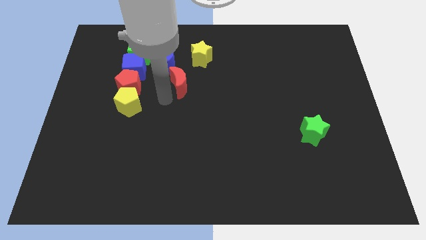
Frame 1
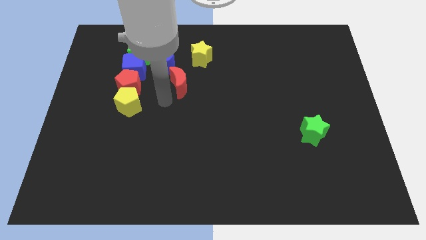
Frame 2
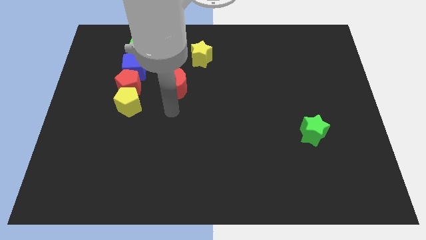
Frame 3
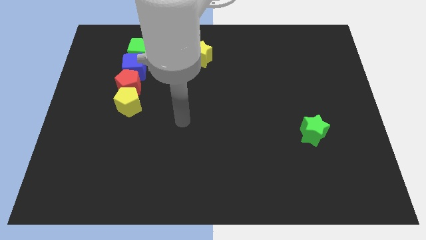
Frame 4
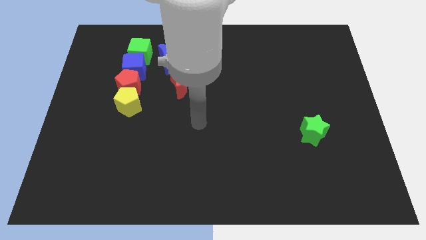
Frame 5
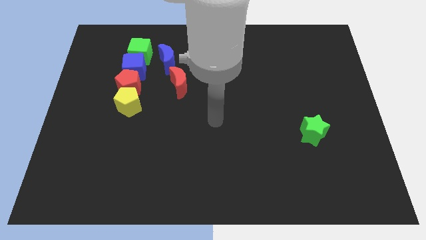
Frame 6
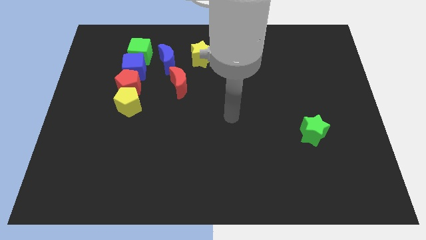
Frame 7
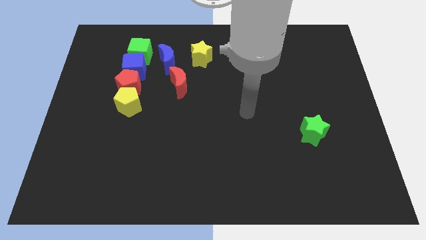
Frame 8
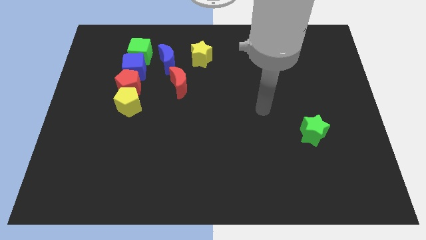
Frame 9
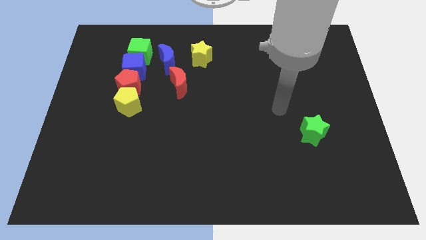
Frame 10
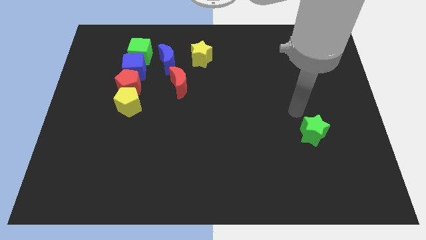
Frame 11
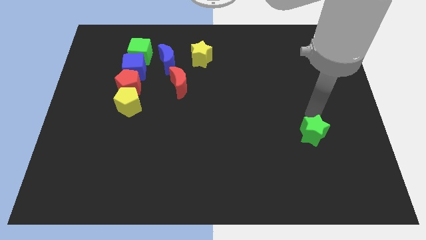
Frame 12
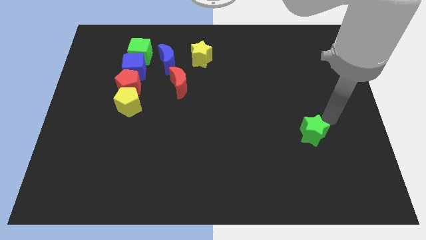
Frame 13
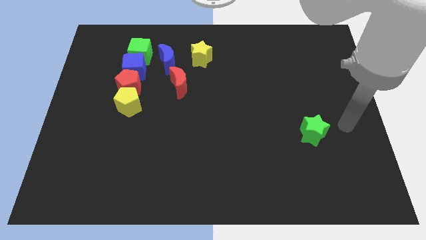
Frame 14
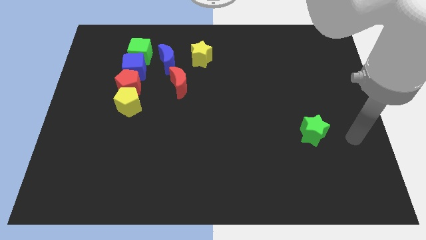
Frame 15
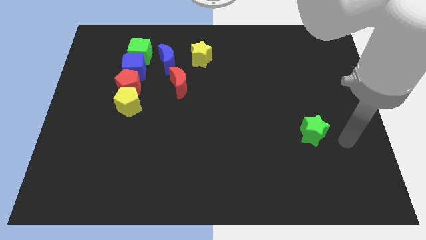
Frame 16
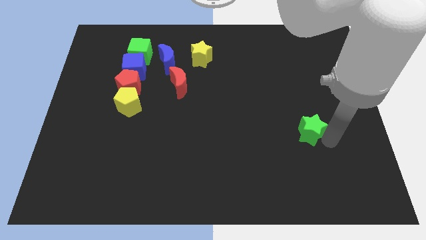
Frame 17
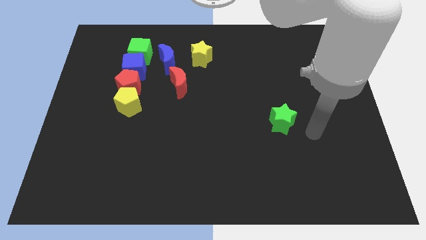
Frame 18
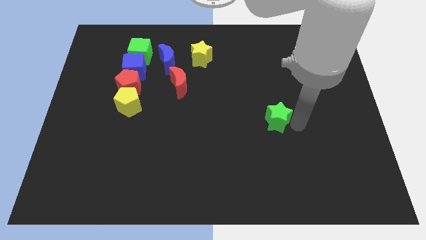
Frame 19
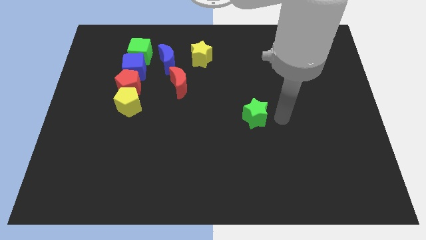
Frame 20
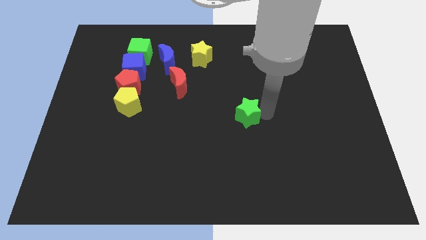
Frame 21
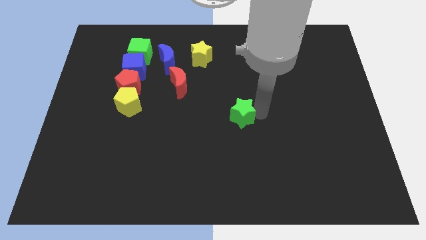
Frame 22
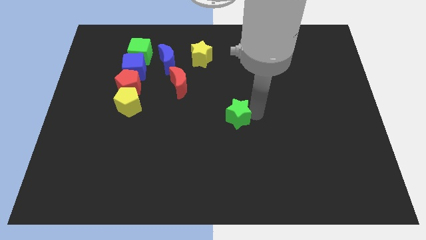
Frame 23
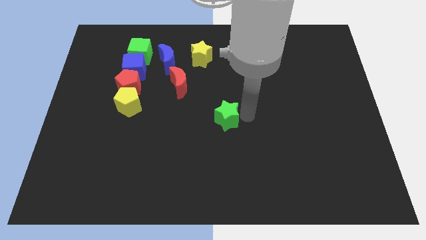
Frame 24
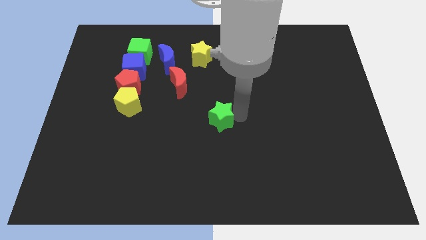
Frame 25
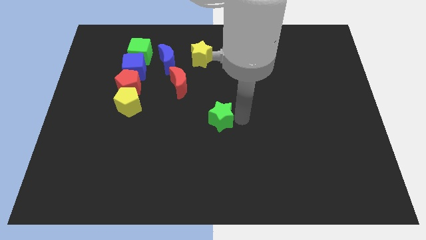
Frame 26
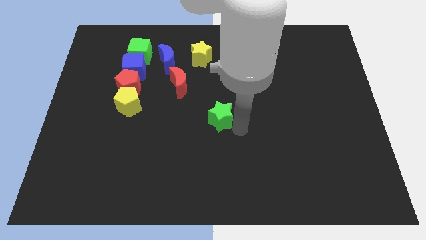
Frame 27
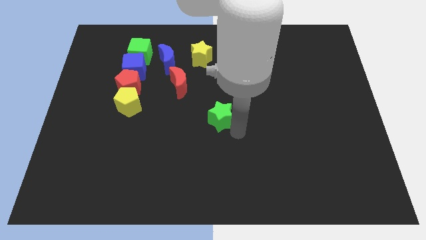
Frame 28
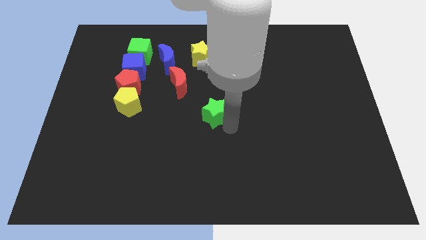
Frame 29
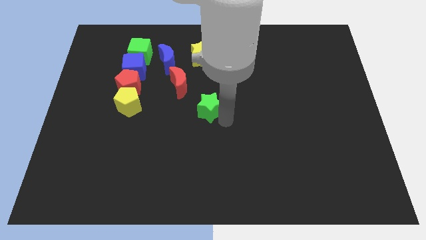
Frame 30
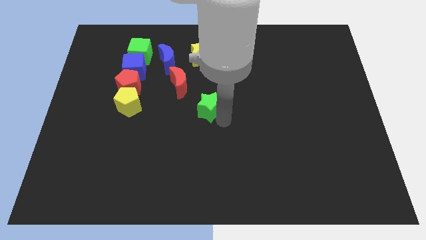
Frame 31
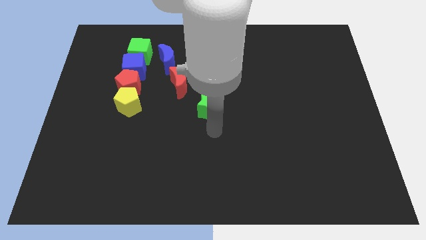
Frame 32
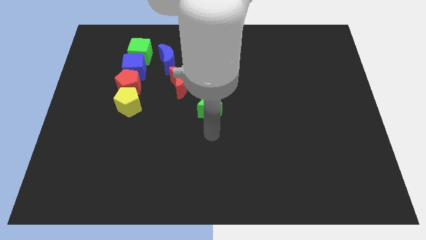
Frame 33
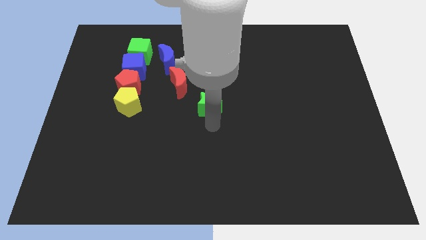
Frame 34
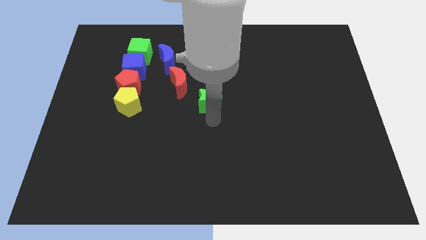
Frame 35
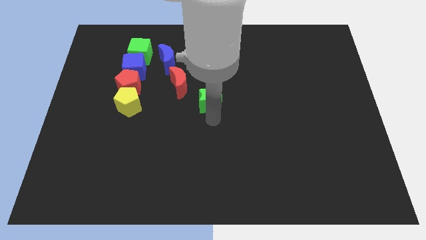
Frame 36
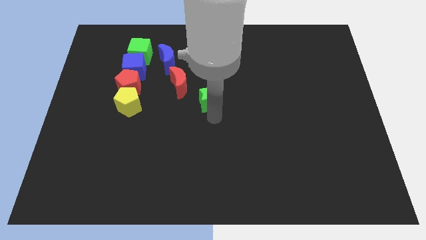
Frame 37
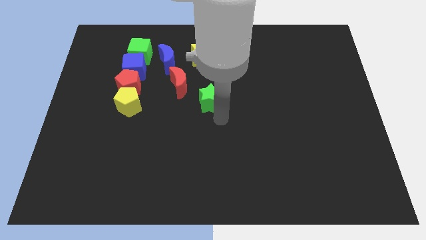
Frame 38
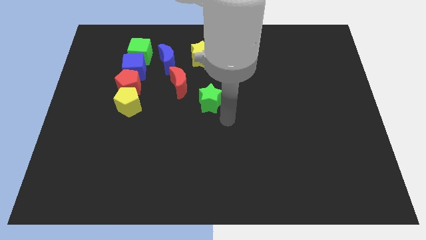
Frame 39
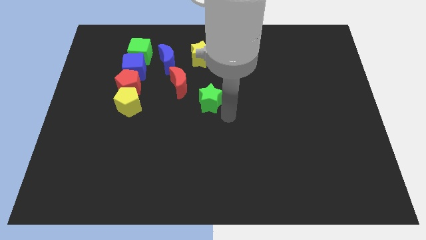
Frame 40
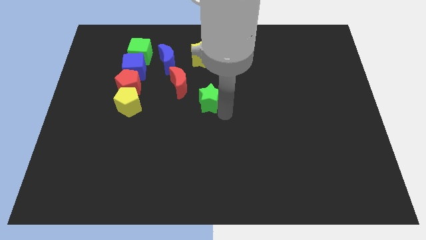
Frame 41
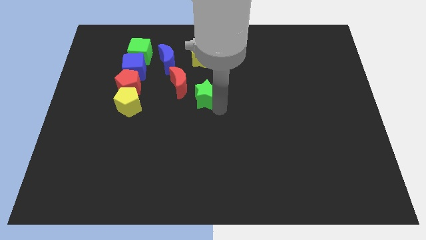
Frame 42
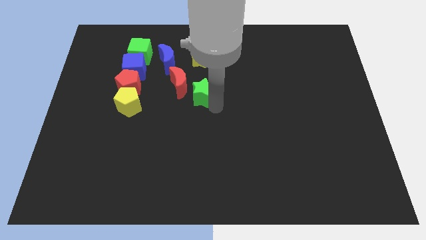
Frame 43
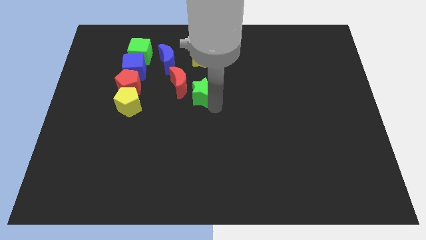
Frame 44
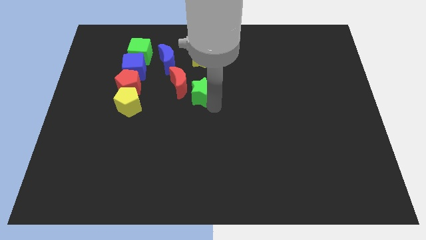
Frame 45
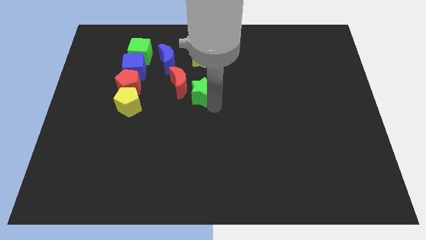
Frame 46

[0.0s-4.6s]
move the green star to the right bottom of the red moon

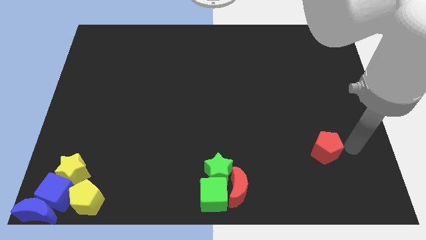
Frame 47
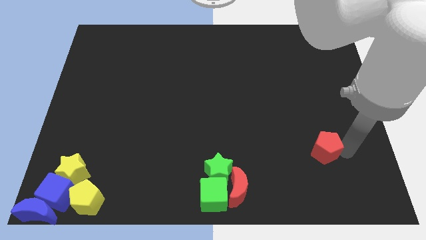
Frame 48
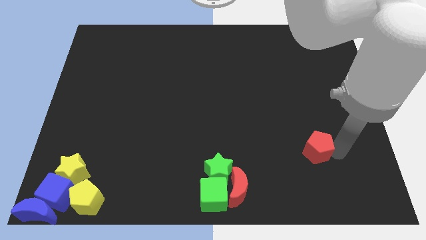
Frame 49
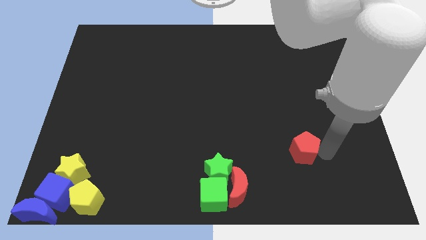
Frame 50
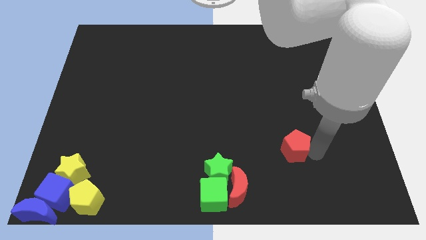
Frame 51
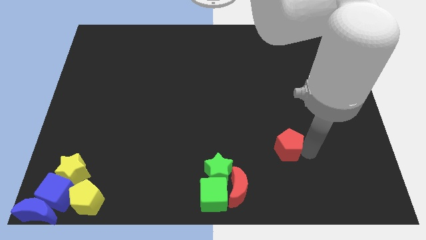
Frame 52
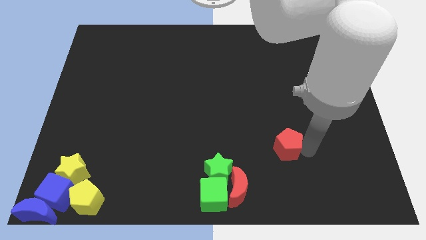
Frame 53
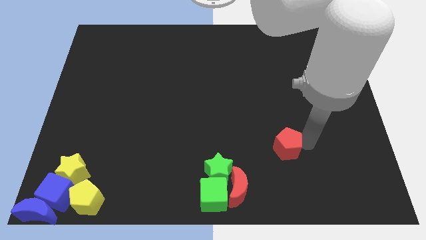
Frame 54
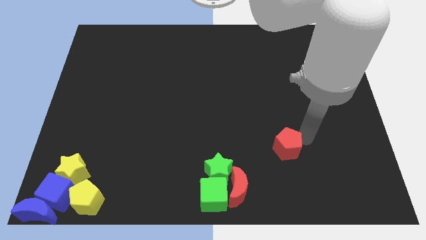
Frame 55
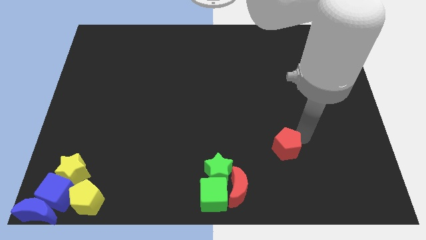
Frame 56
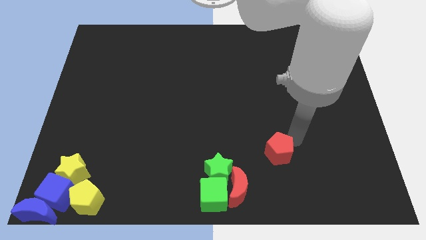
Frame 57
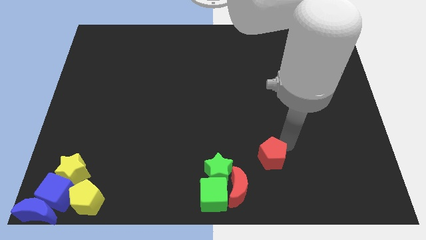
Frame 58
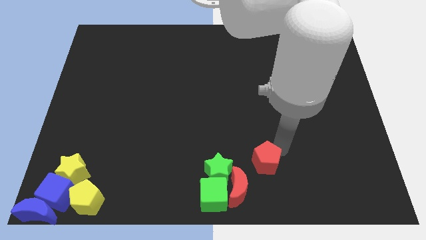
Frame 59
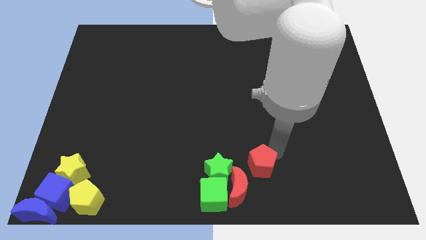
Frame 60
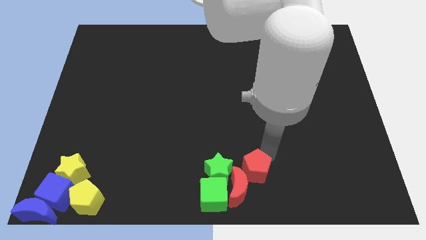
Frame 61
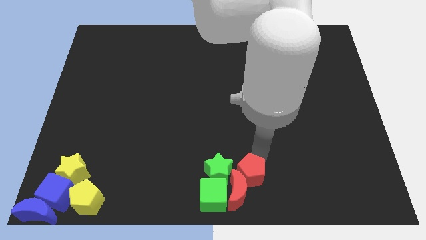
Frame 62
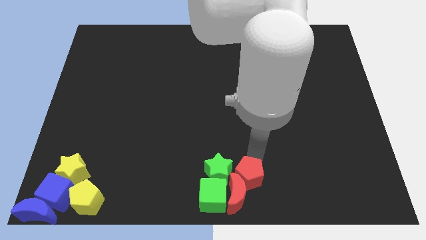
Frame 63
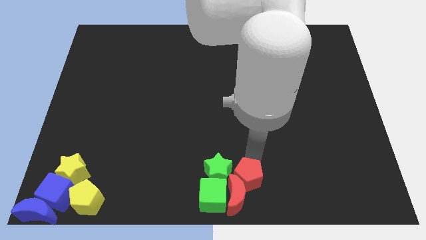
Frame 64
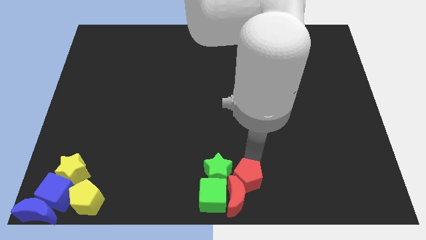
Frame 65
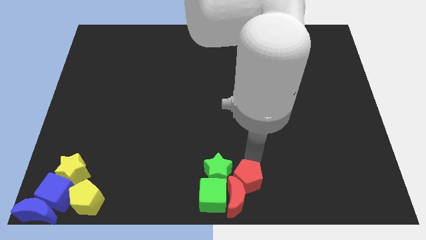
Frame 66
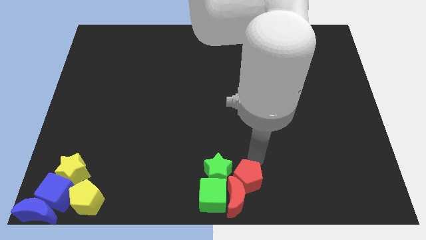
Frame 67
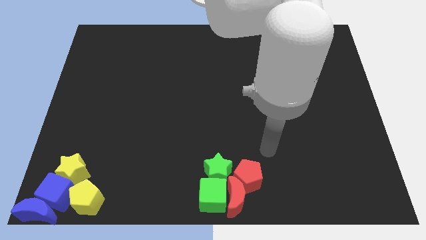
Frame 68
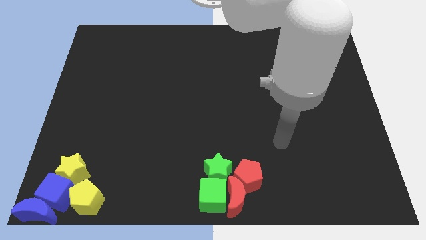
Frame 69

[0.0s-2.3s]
slide red pentagon into red moon

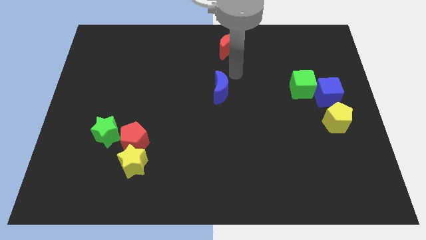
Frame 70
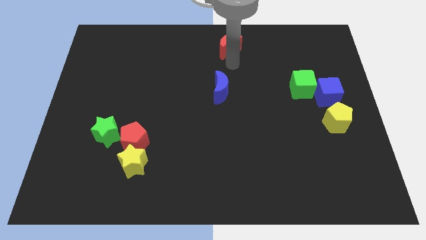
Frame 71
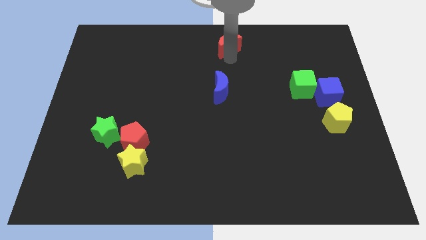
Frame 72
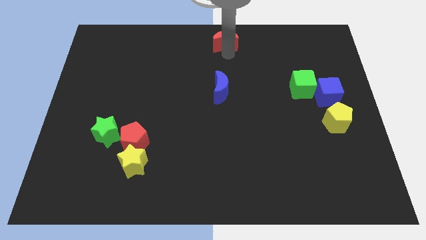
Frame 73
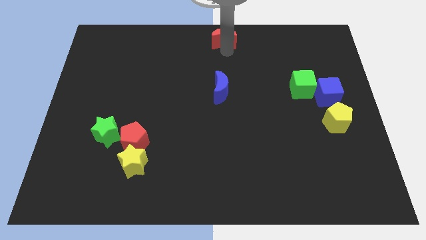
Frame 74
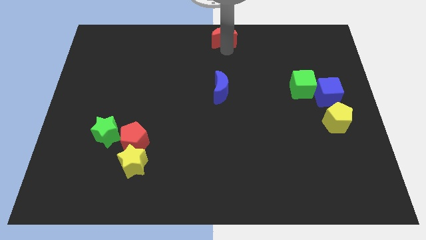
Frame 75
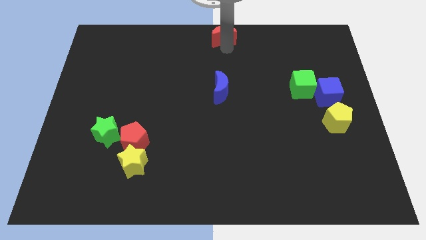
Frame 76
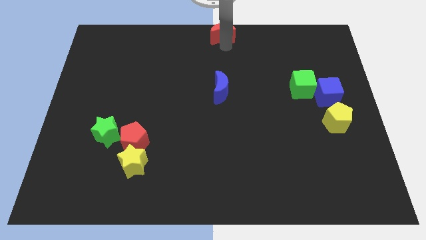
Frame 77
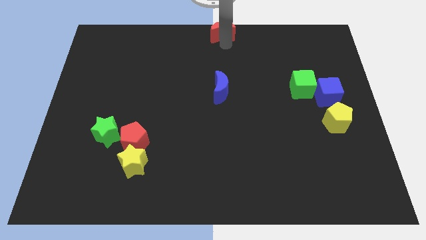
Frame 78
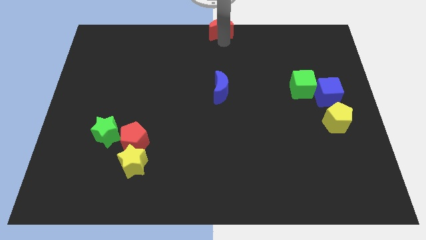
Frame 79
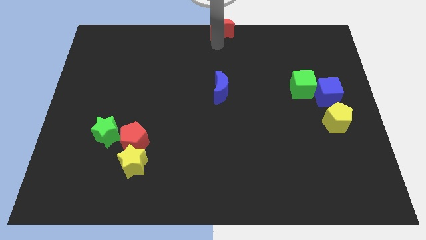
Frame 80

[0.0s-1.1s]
push the red moon to the top middle

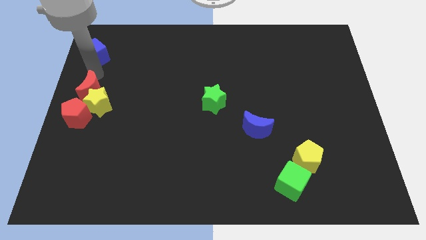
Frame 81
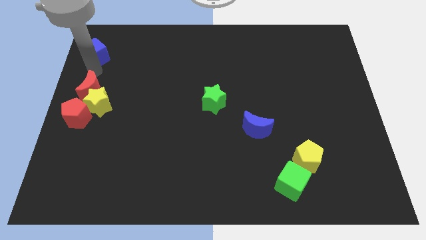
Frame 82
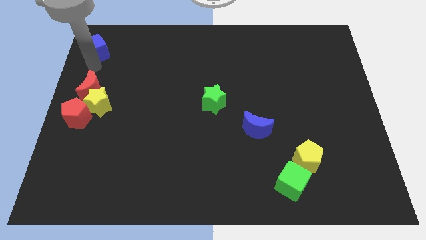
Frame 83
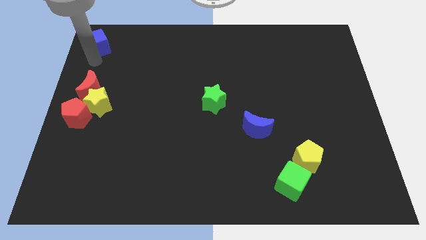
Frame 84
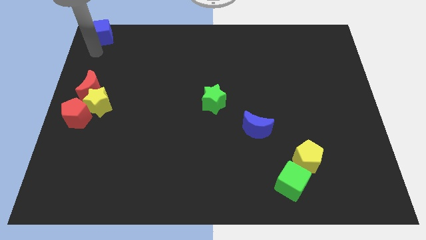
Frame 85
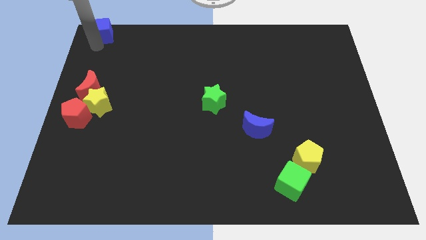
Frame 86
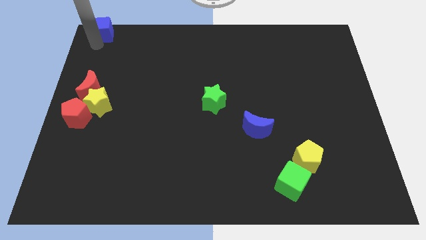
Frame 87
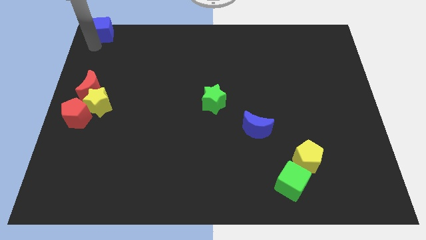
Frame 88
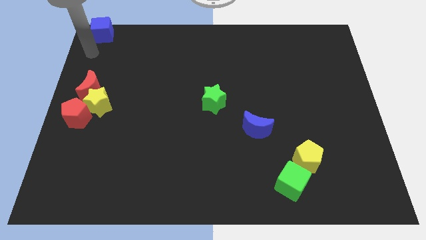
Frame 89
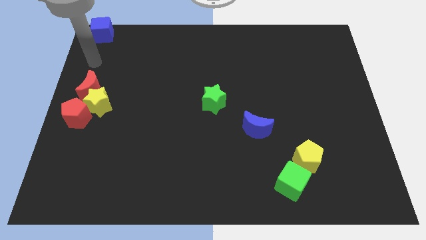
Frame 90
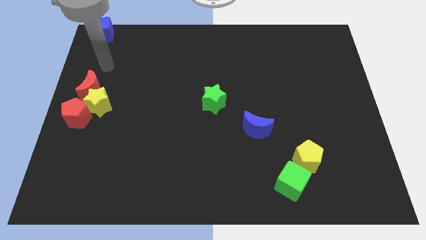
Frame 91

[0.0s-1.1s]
push the blue cube to the top left corner of the board
